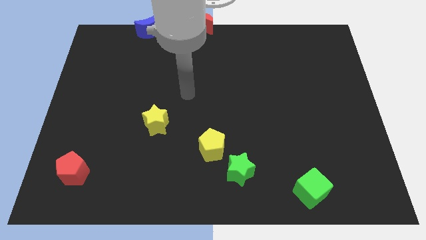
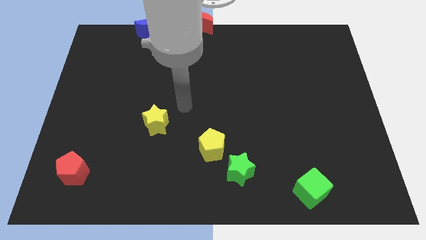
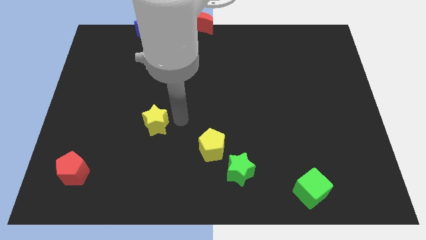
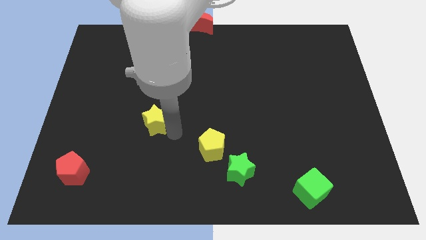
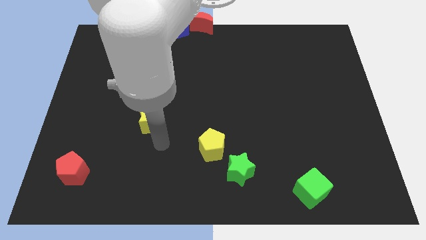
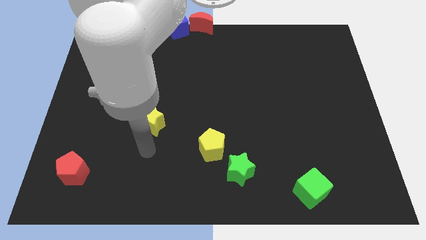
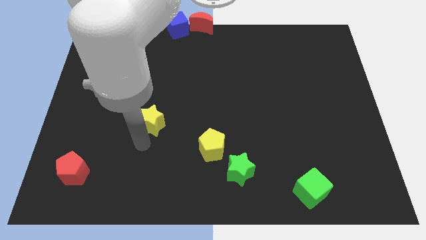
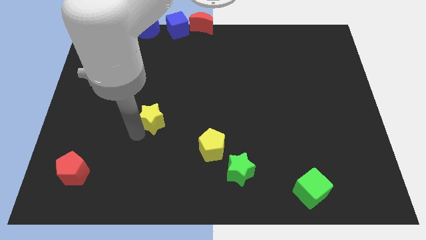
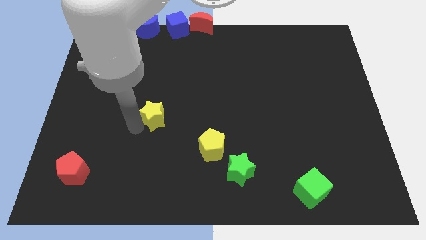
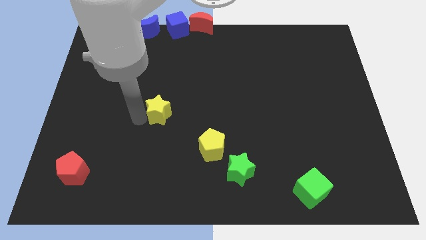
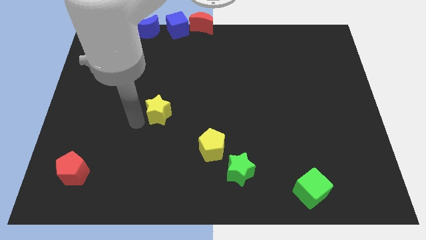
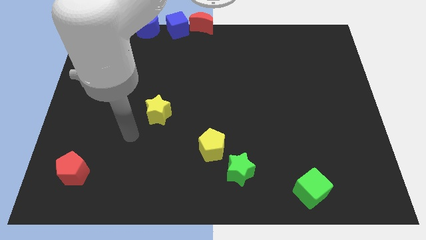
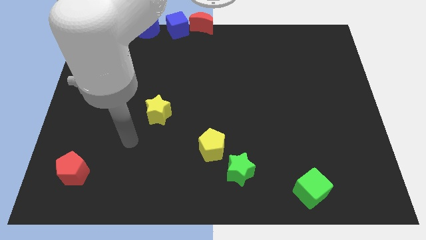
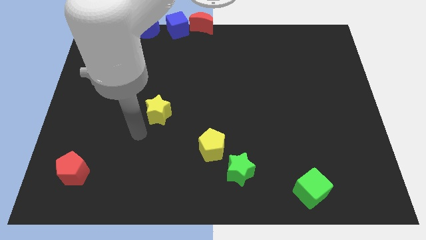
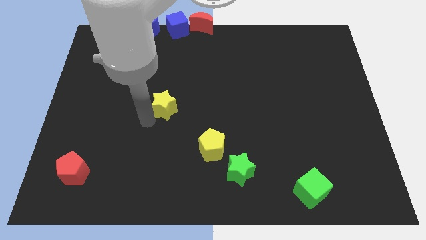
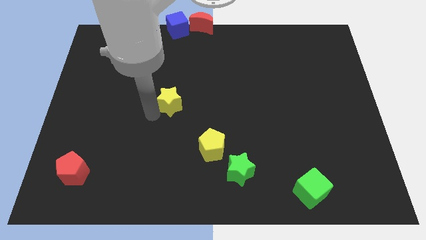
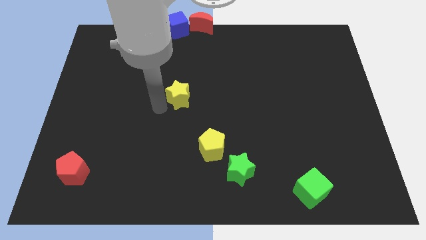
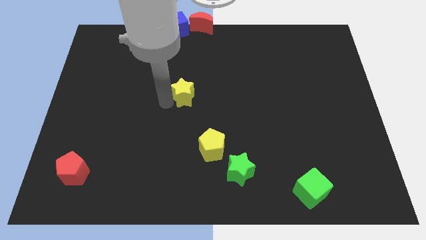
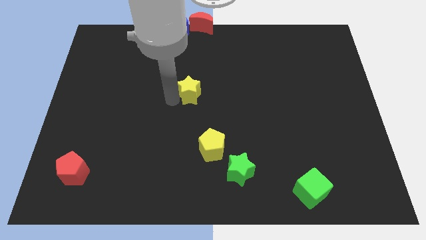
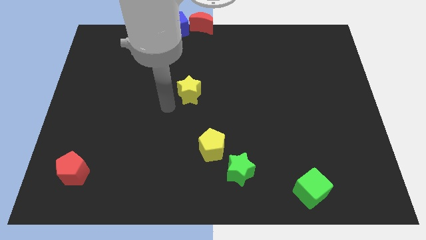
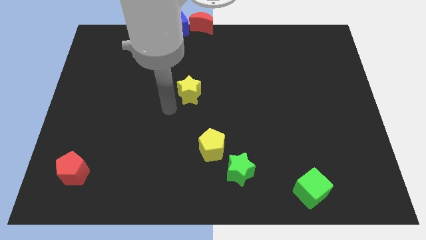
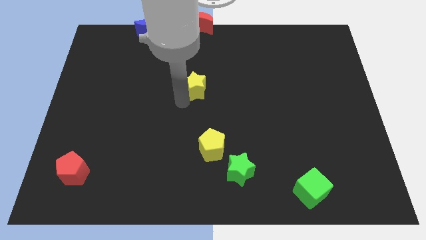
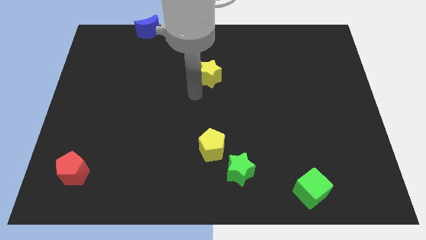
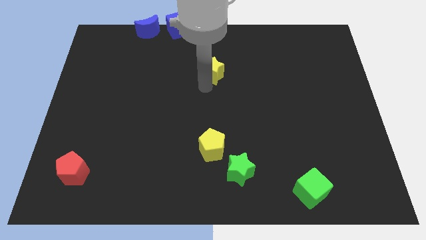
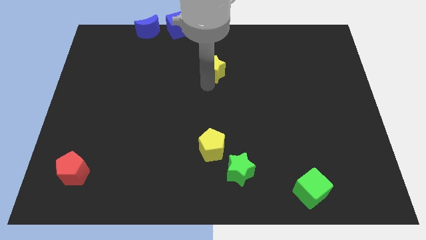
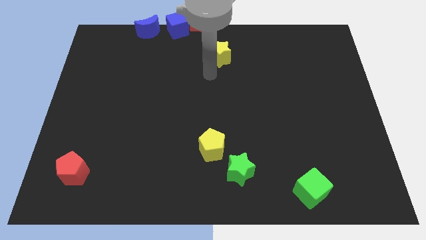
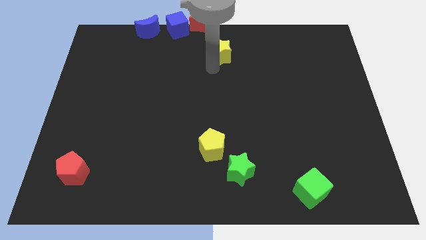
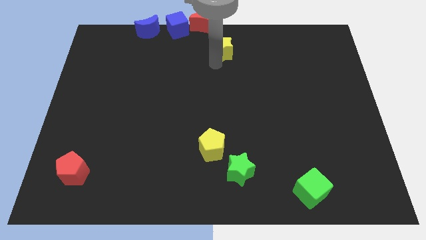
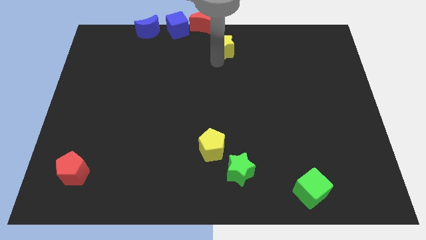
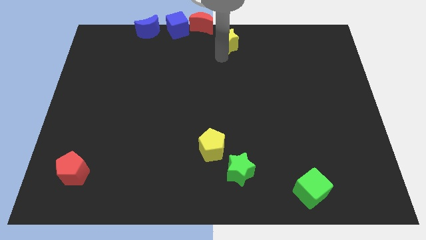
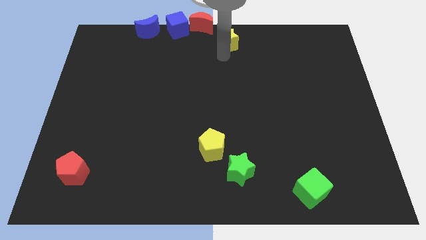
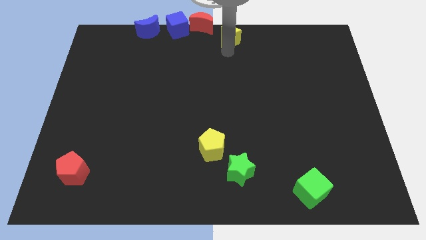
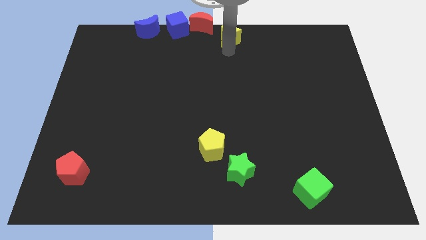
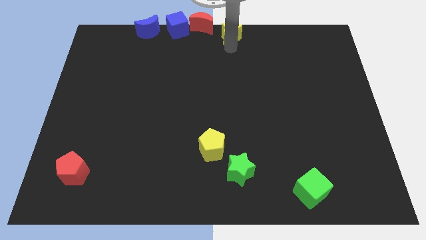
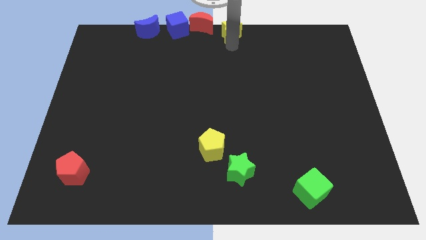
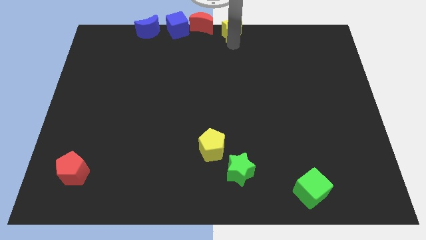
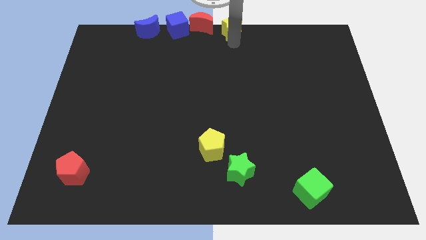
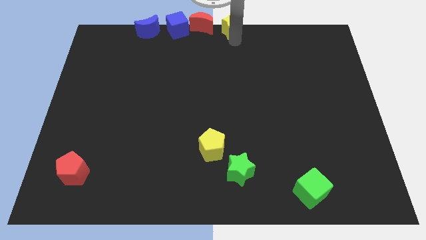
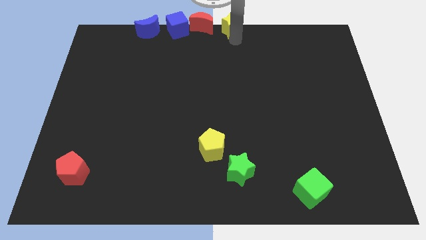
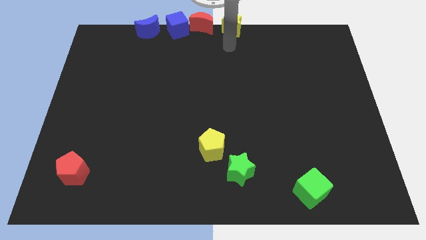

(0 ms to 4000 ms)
put the yellow star above the green star

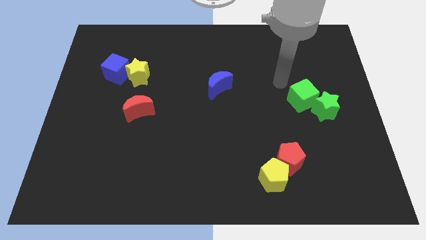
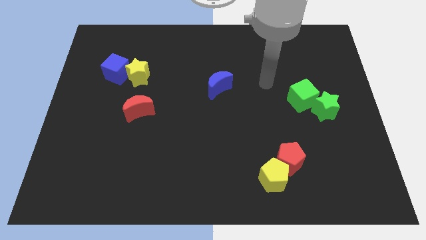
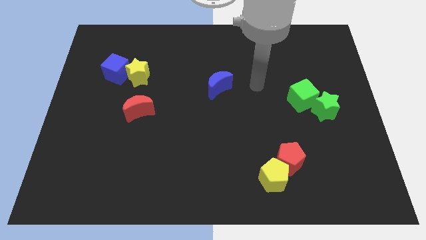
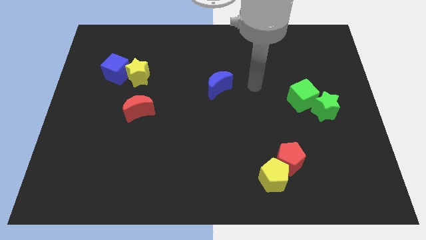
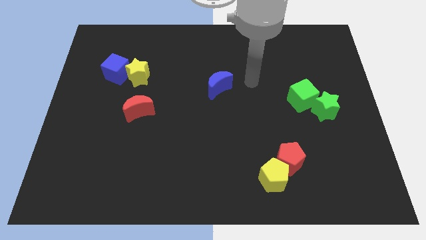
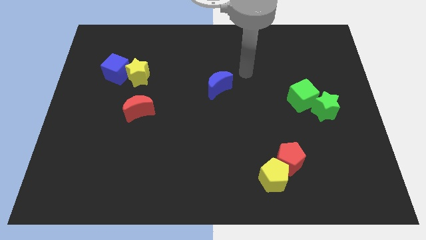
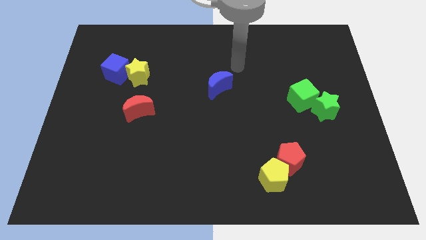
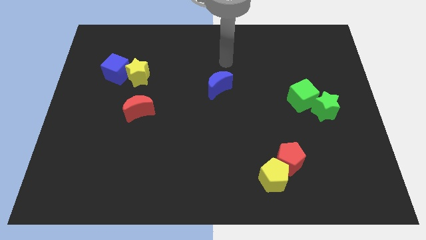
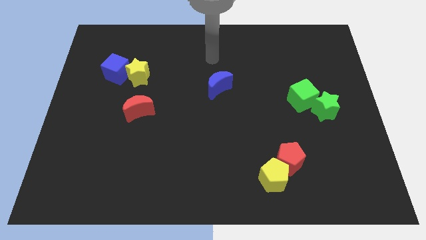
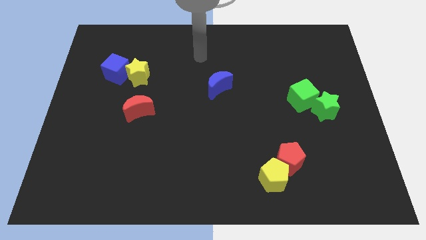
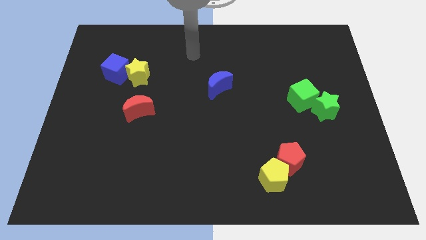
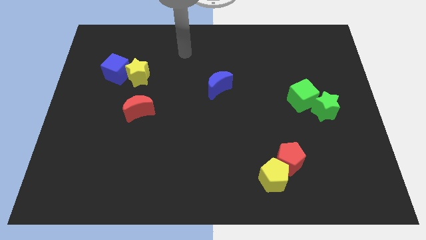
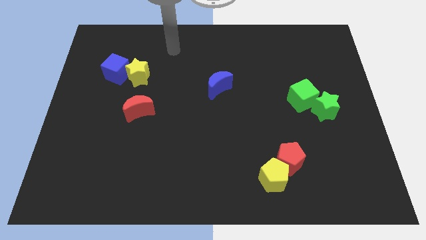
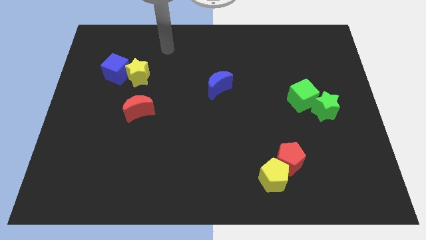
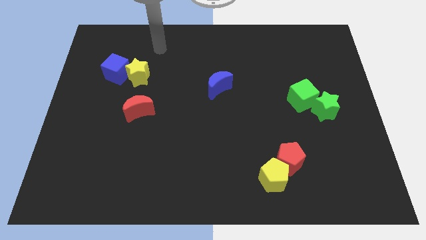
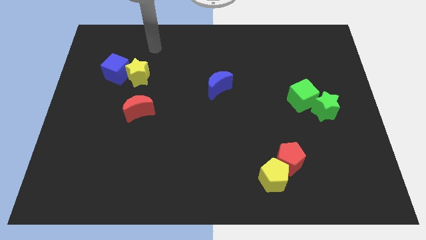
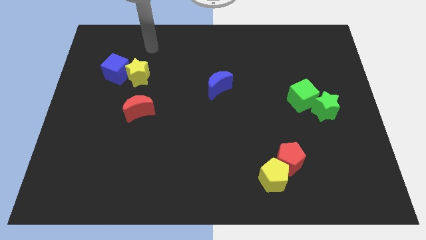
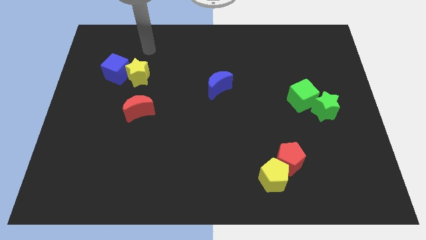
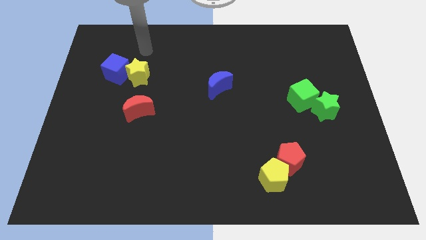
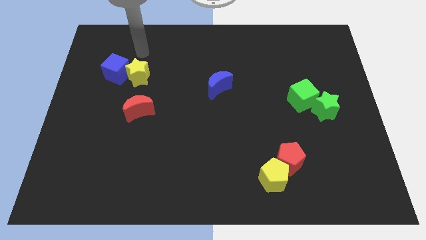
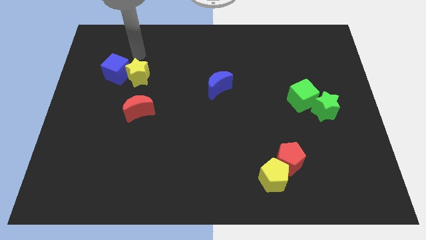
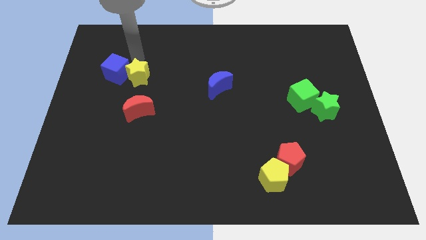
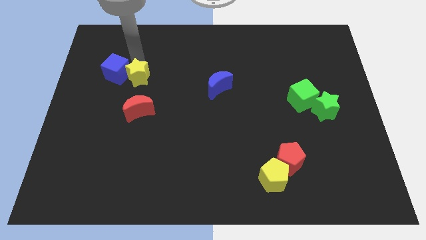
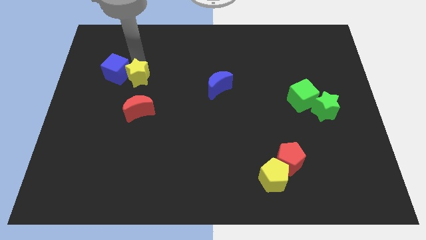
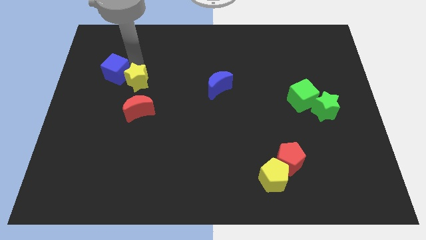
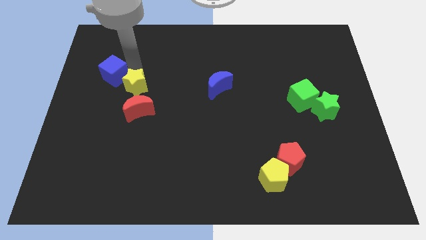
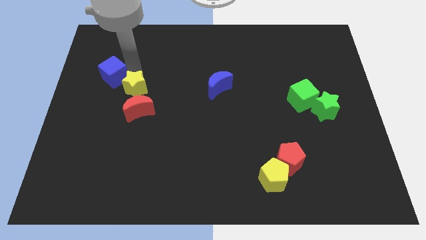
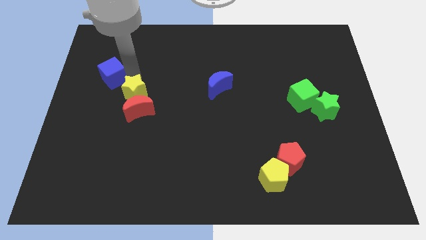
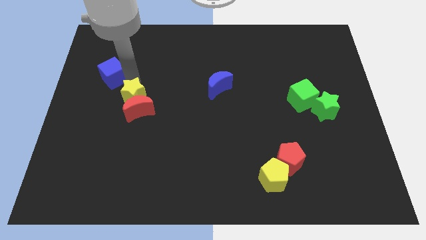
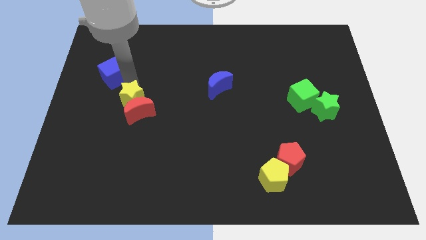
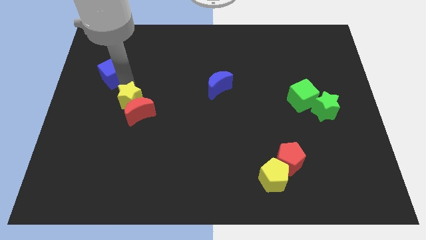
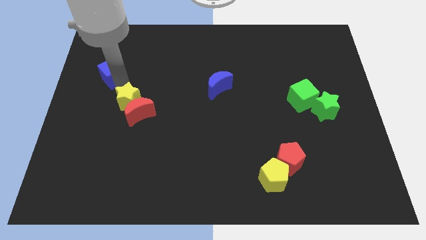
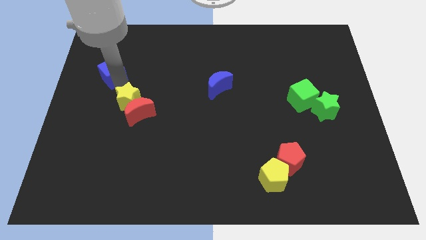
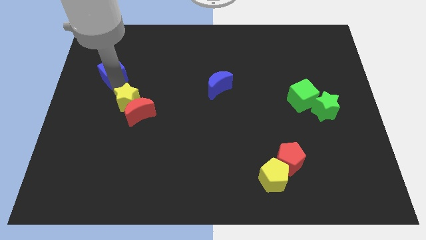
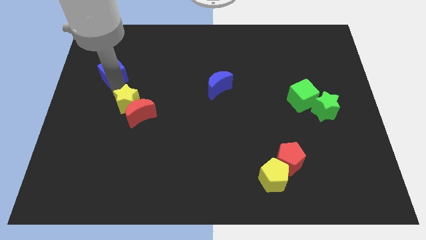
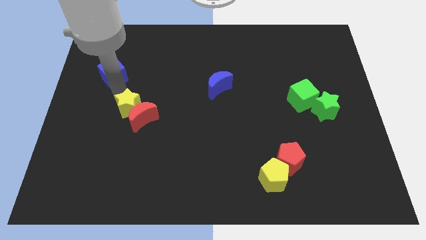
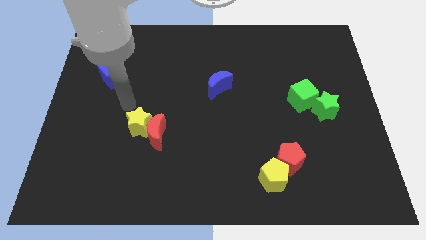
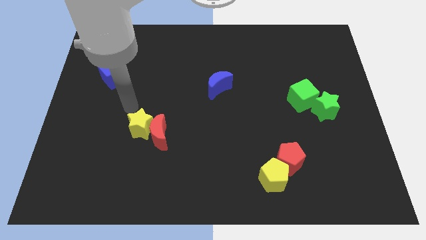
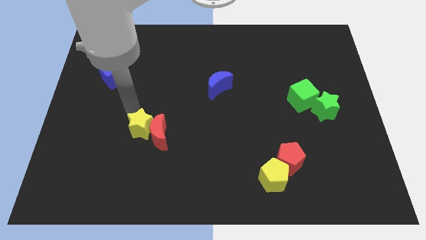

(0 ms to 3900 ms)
move yellow star apart from the blue cube

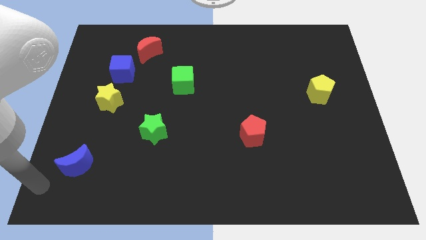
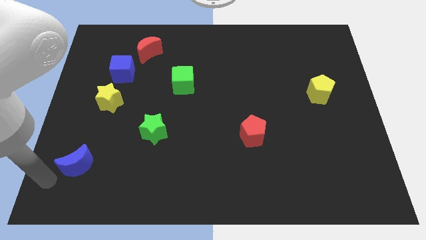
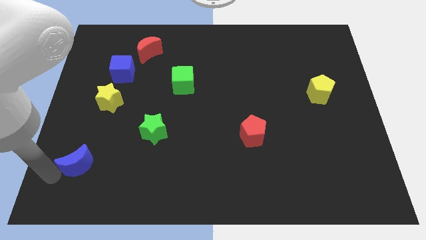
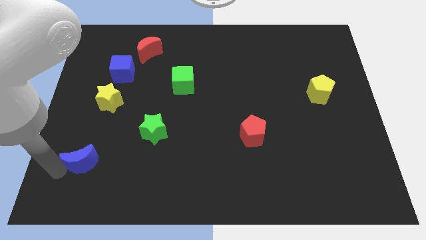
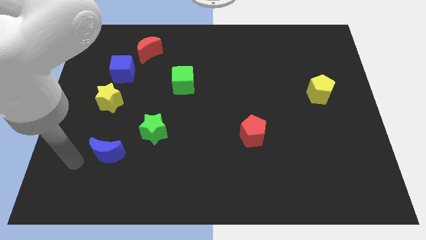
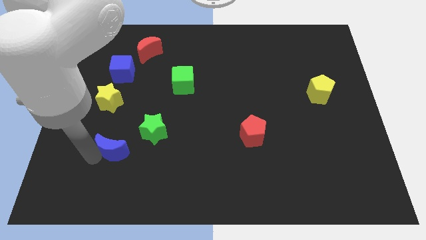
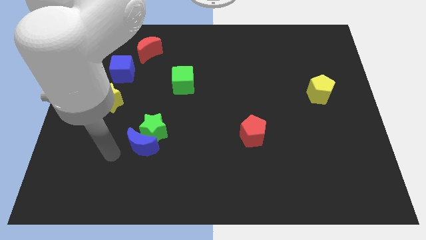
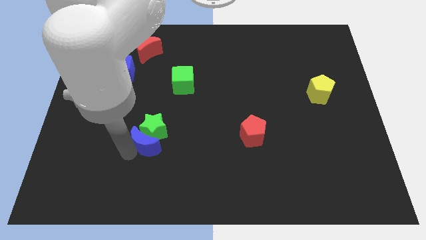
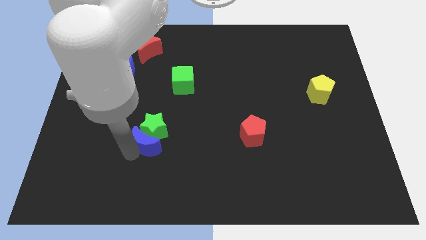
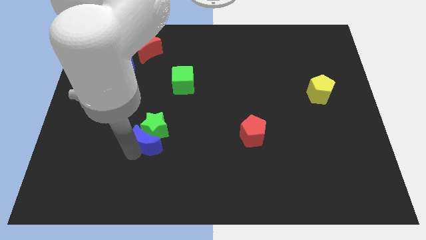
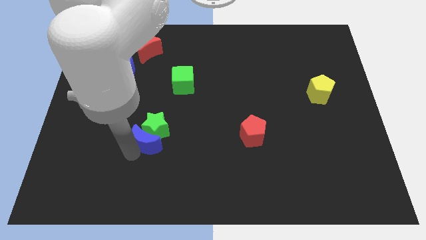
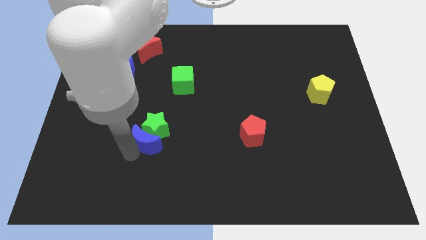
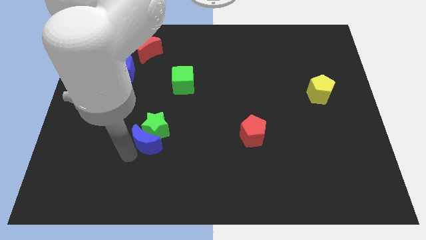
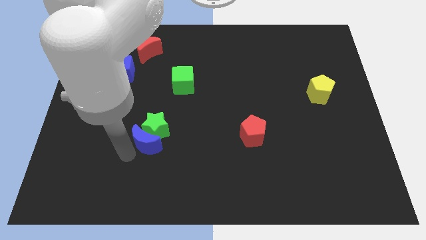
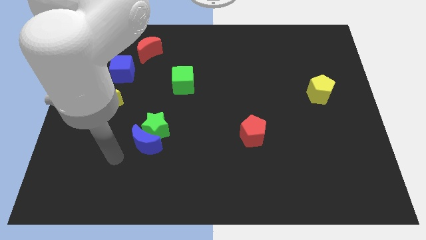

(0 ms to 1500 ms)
place blue crescent below the green star
